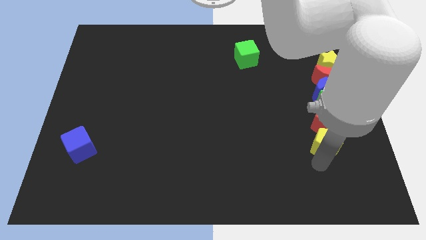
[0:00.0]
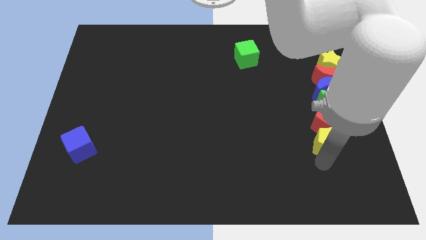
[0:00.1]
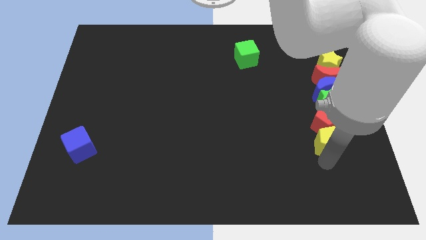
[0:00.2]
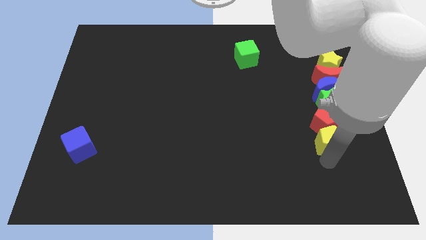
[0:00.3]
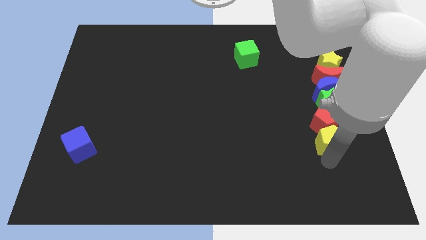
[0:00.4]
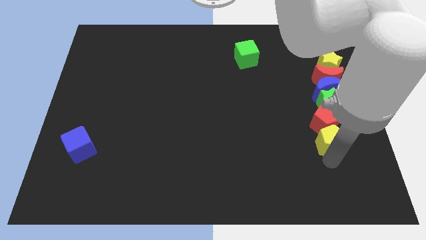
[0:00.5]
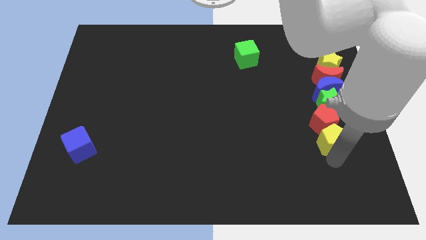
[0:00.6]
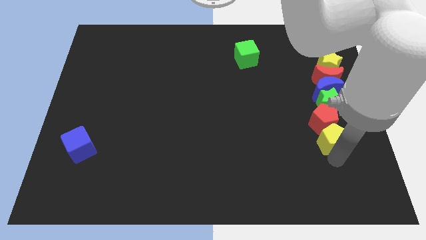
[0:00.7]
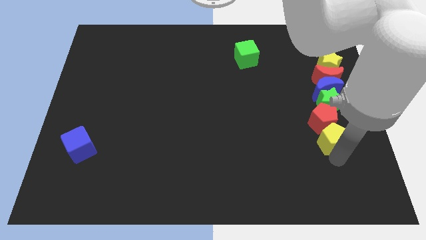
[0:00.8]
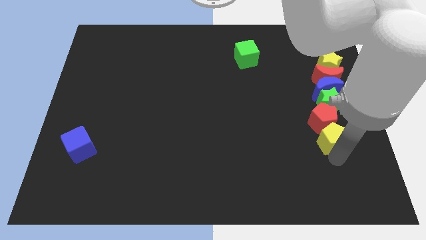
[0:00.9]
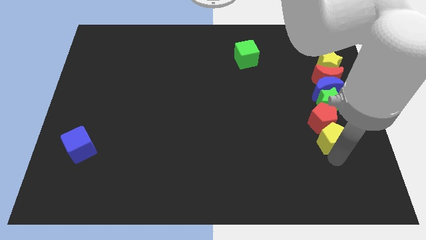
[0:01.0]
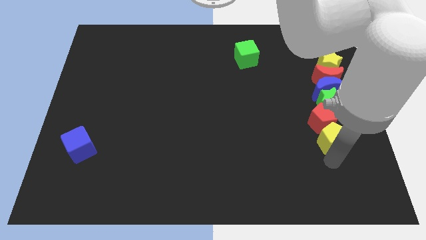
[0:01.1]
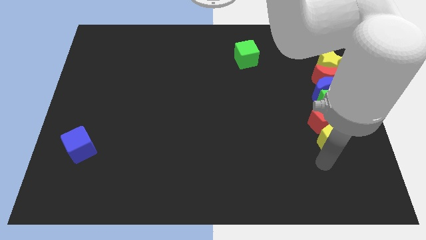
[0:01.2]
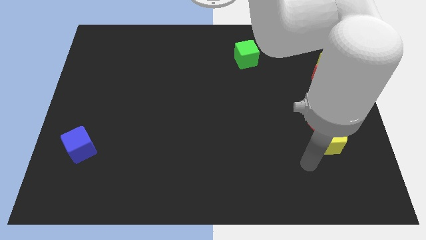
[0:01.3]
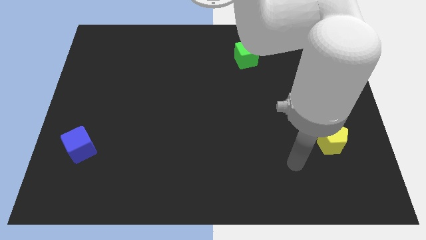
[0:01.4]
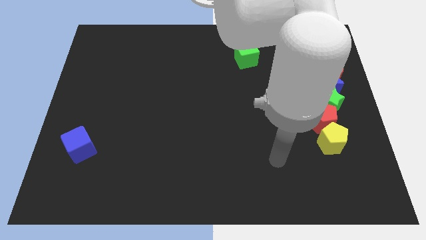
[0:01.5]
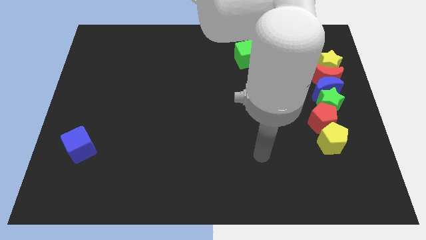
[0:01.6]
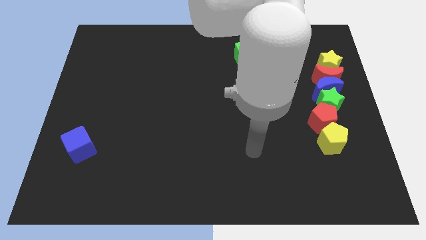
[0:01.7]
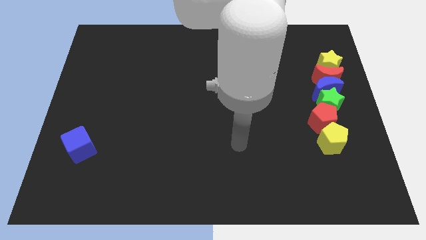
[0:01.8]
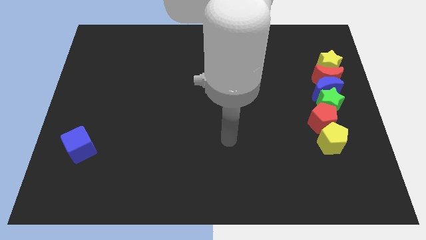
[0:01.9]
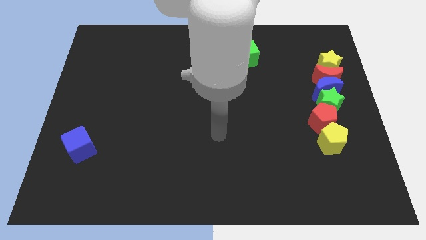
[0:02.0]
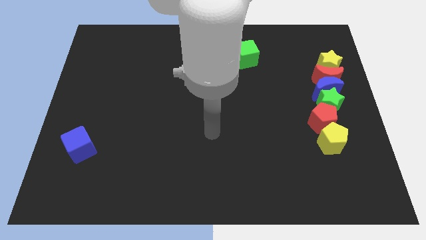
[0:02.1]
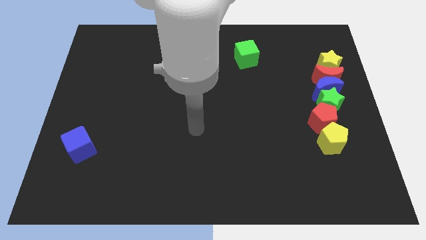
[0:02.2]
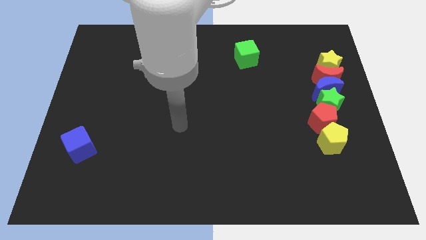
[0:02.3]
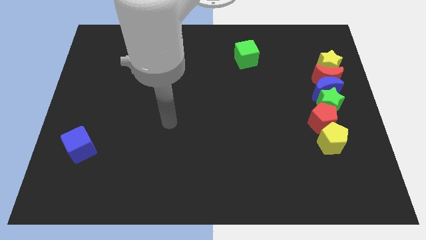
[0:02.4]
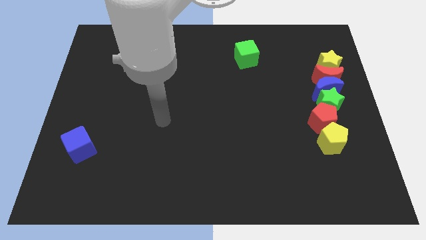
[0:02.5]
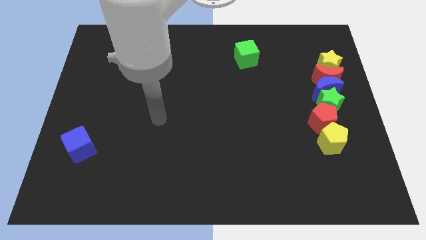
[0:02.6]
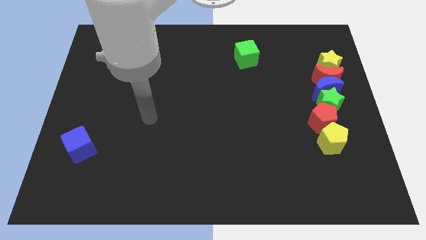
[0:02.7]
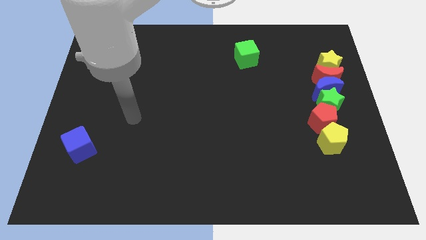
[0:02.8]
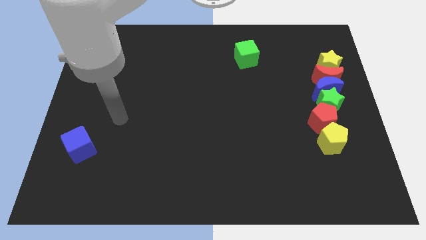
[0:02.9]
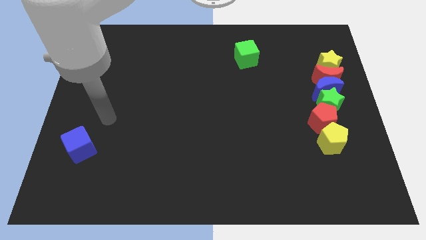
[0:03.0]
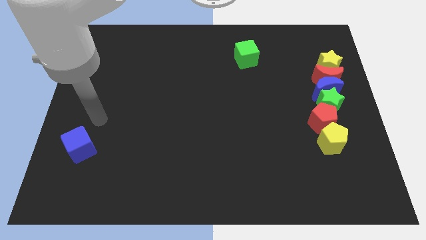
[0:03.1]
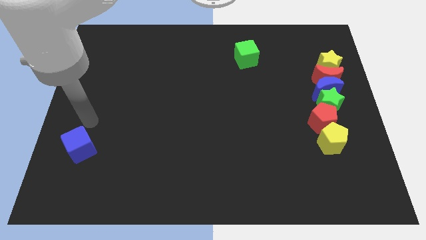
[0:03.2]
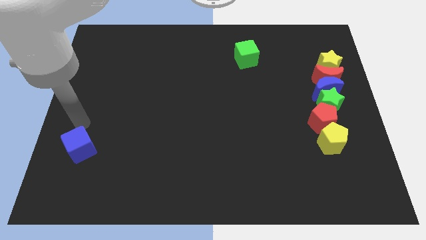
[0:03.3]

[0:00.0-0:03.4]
move the arm to the left center of the board

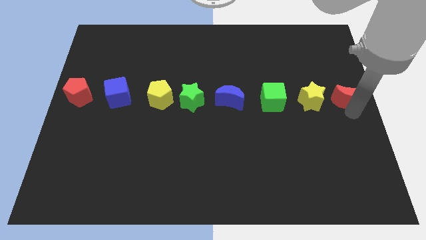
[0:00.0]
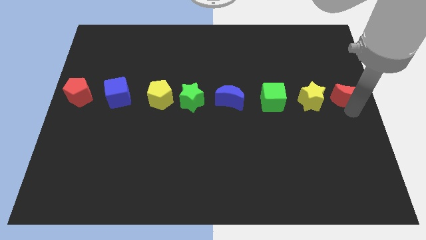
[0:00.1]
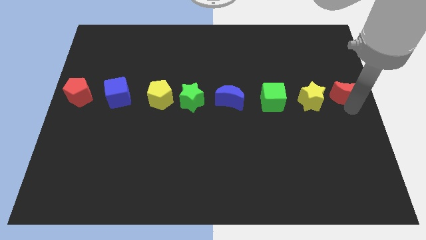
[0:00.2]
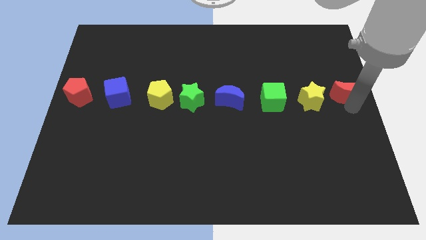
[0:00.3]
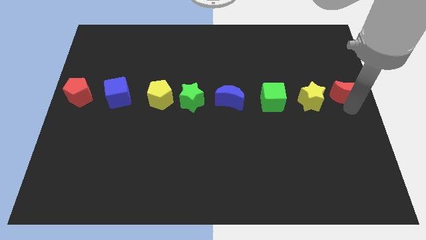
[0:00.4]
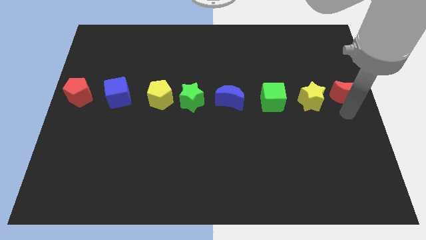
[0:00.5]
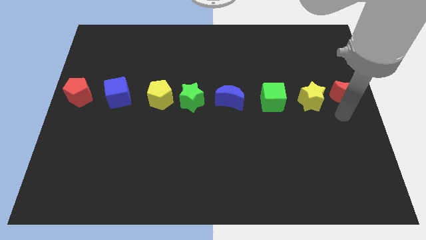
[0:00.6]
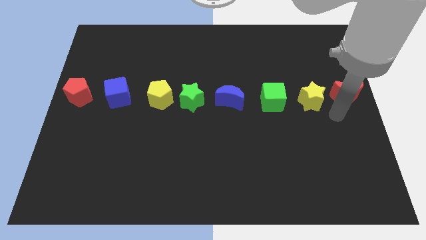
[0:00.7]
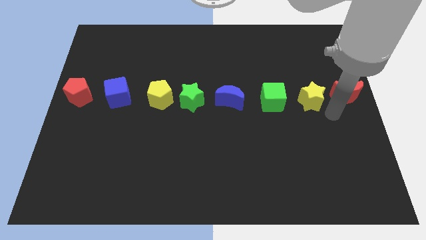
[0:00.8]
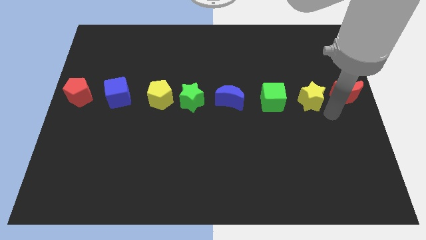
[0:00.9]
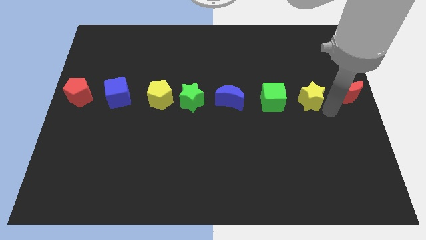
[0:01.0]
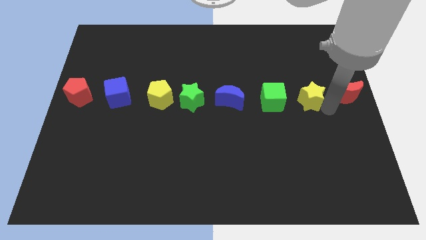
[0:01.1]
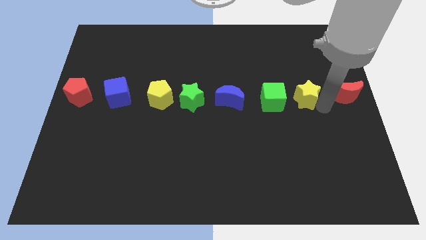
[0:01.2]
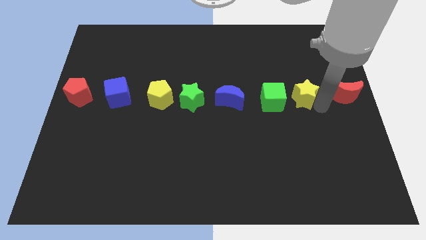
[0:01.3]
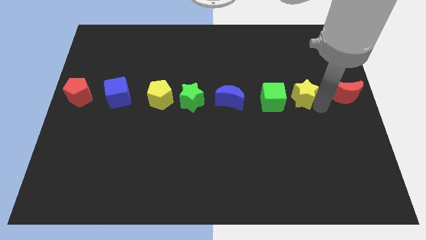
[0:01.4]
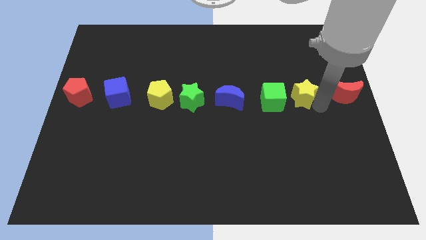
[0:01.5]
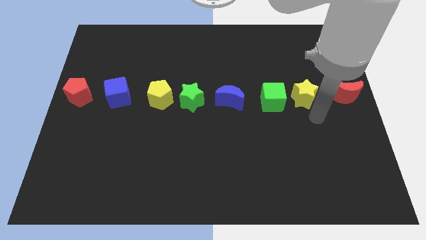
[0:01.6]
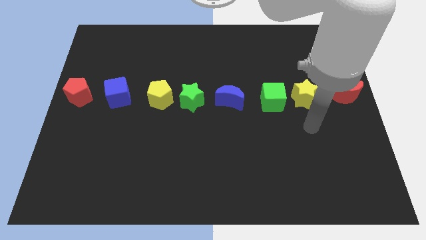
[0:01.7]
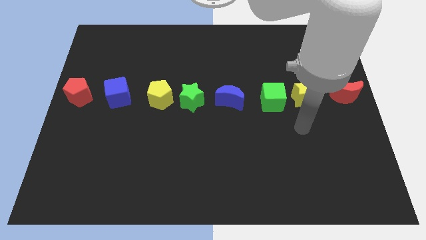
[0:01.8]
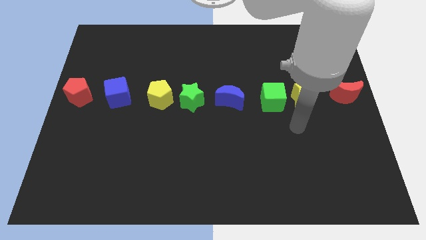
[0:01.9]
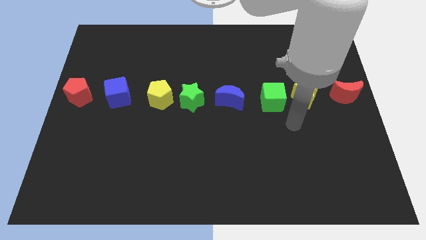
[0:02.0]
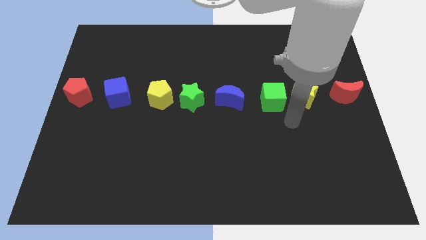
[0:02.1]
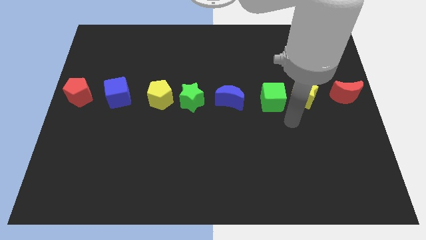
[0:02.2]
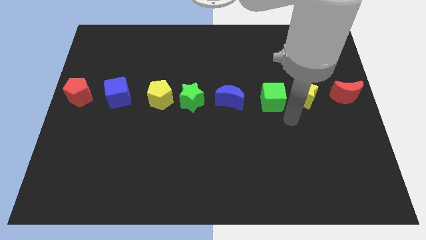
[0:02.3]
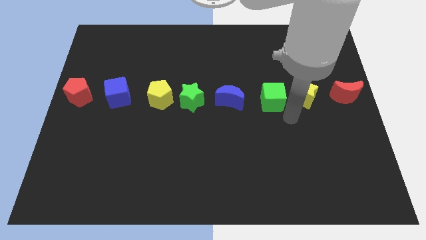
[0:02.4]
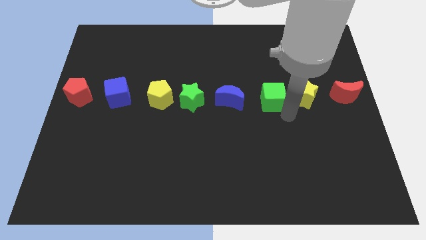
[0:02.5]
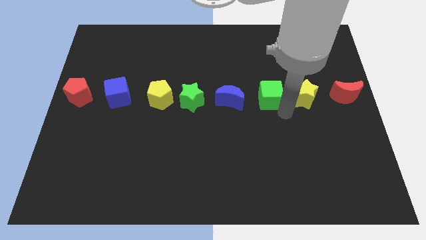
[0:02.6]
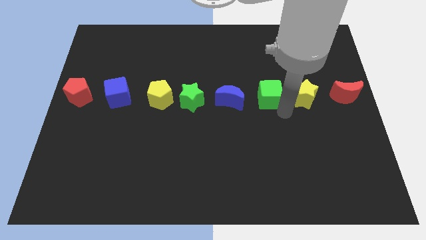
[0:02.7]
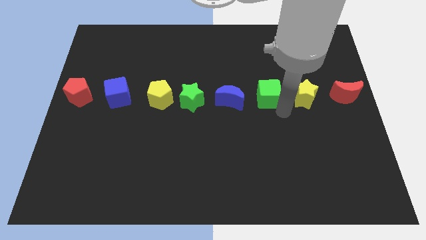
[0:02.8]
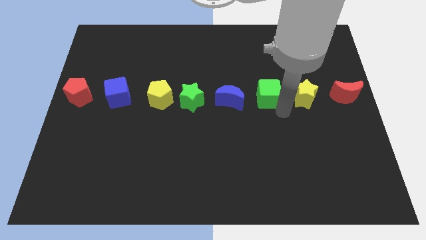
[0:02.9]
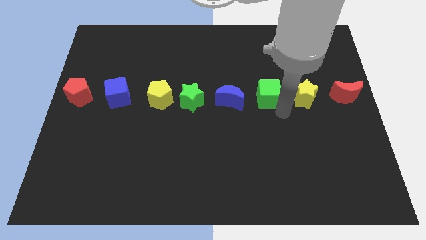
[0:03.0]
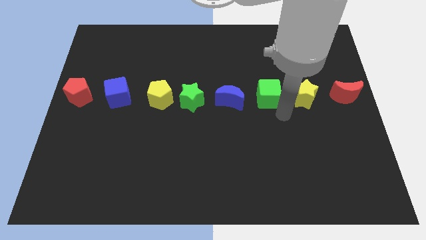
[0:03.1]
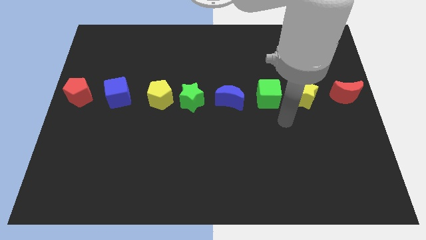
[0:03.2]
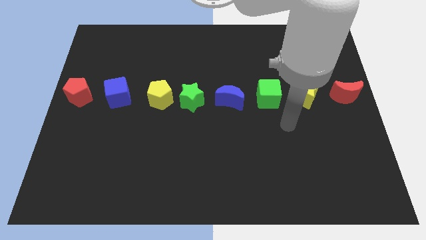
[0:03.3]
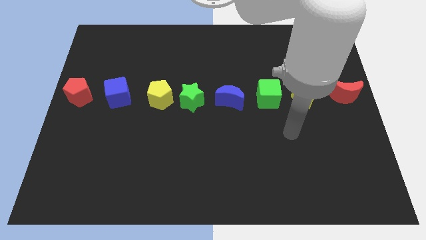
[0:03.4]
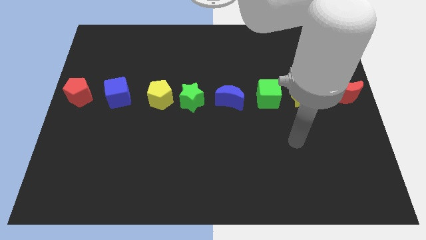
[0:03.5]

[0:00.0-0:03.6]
move the green cube slightly upwards

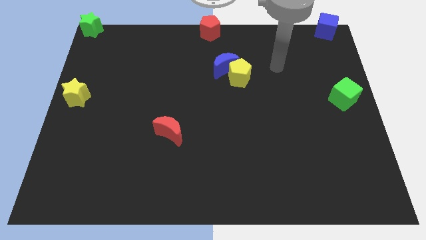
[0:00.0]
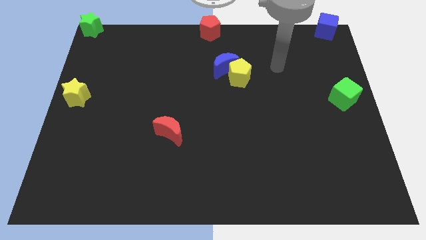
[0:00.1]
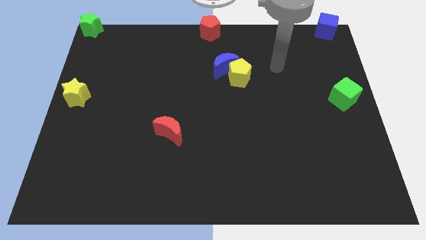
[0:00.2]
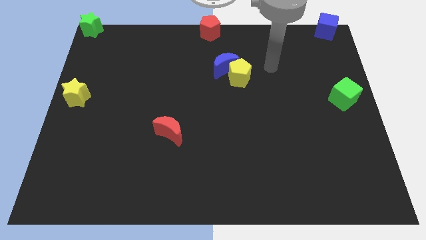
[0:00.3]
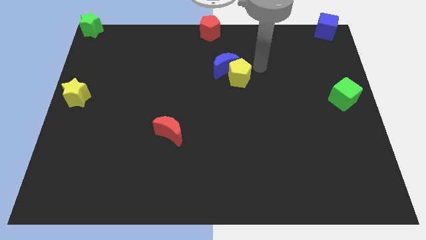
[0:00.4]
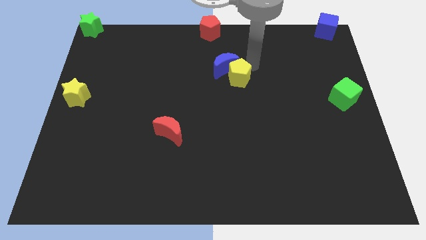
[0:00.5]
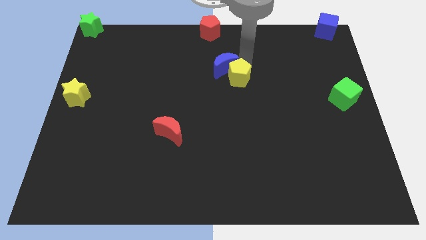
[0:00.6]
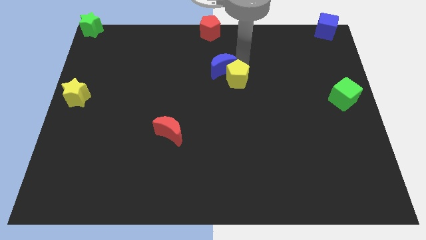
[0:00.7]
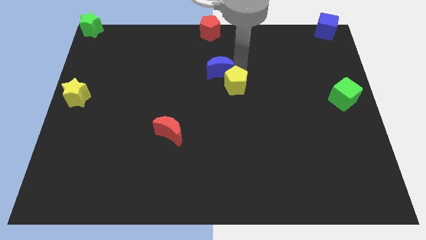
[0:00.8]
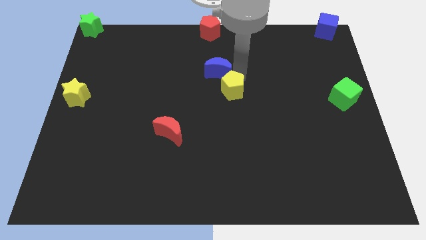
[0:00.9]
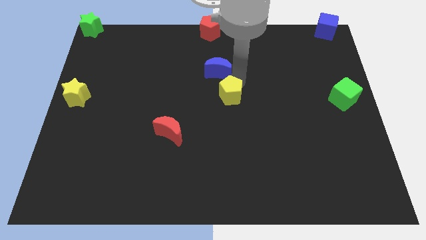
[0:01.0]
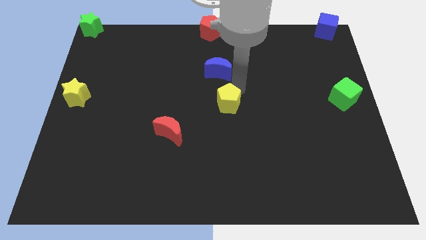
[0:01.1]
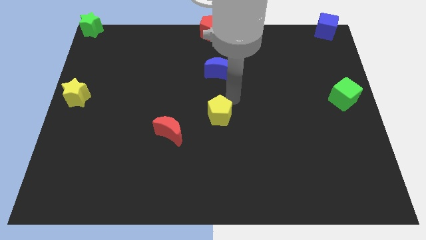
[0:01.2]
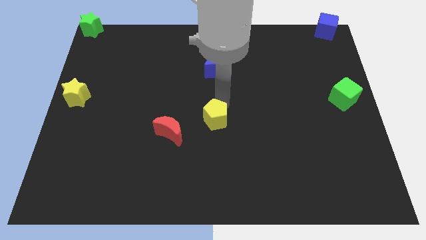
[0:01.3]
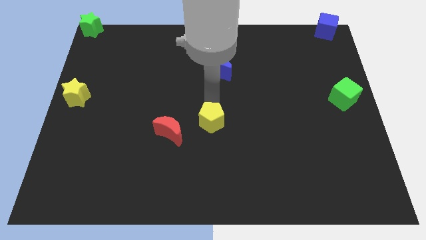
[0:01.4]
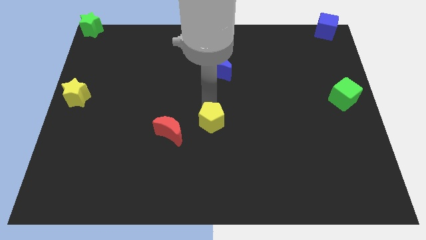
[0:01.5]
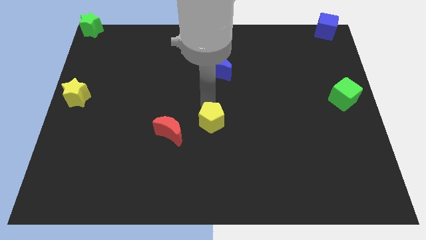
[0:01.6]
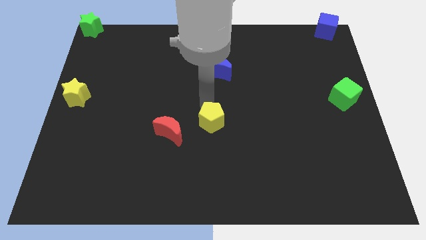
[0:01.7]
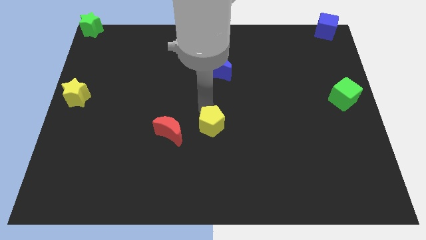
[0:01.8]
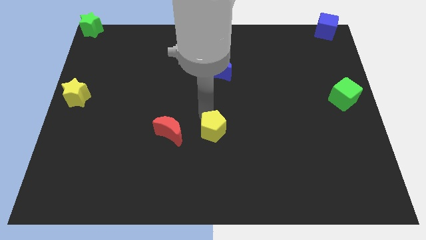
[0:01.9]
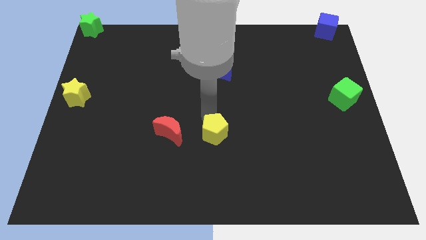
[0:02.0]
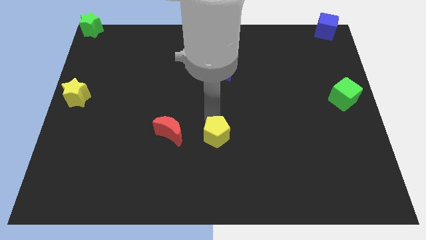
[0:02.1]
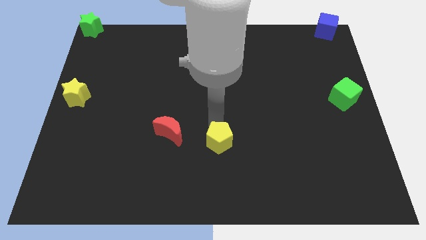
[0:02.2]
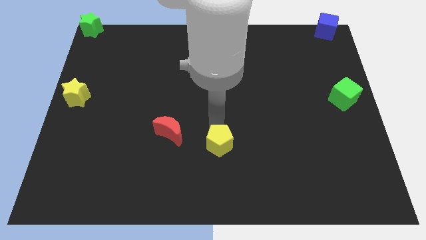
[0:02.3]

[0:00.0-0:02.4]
separate blue moon and yellow pentagon
